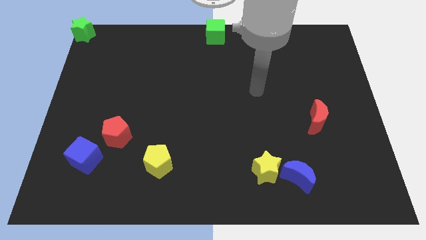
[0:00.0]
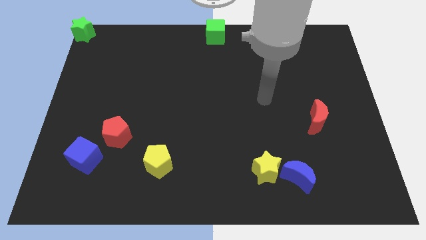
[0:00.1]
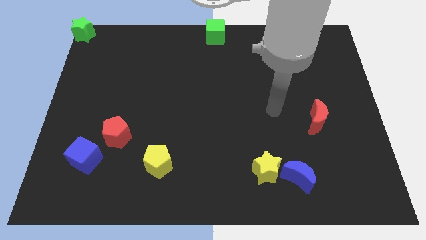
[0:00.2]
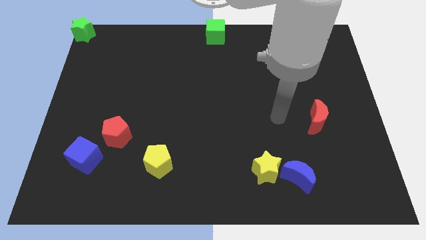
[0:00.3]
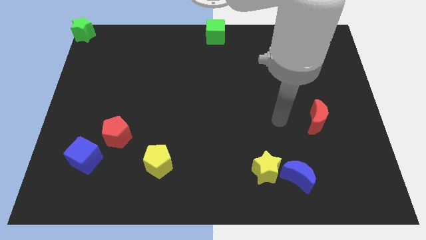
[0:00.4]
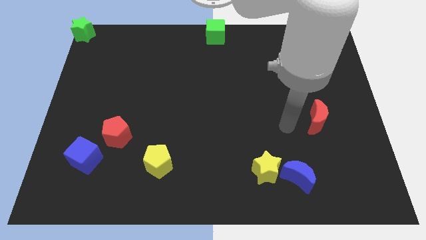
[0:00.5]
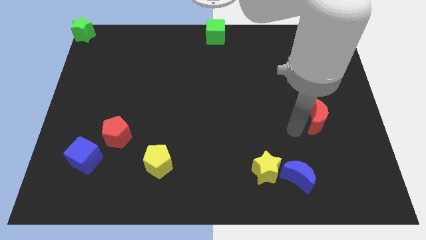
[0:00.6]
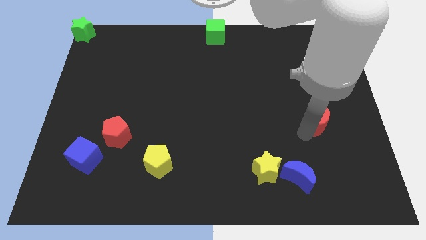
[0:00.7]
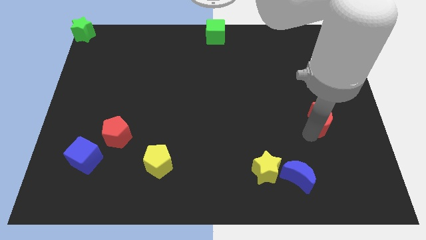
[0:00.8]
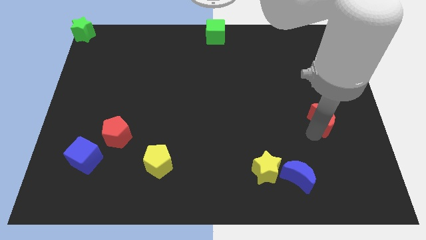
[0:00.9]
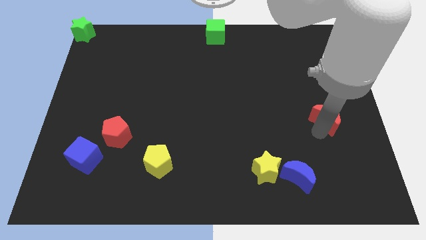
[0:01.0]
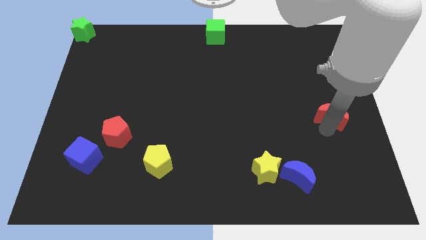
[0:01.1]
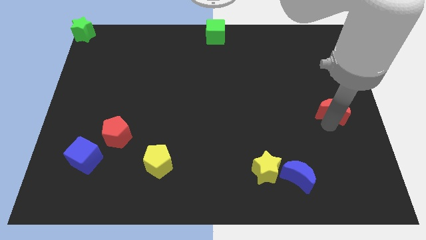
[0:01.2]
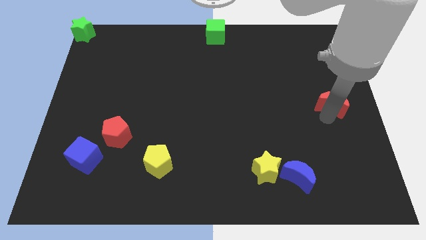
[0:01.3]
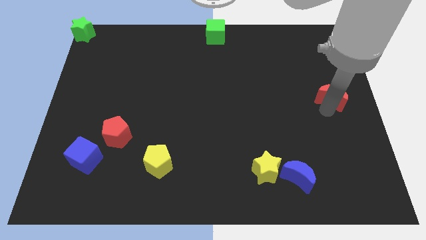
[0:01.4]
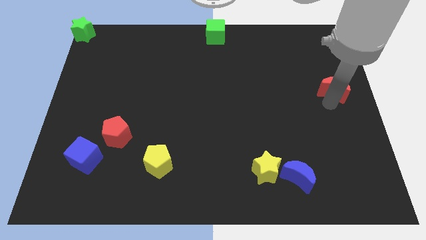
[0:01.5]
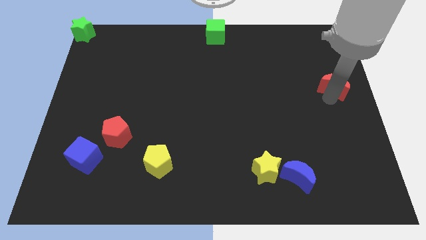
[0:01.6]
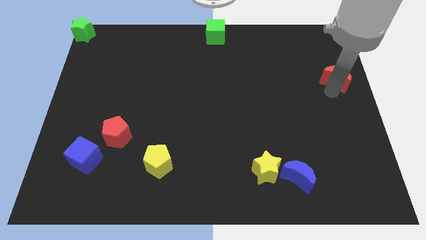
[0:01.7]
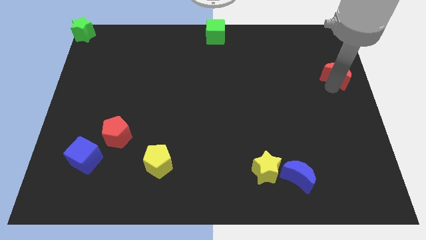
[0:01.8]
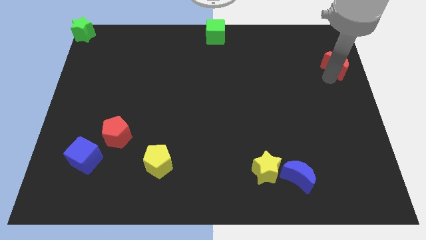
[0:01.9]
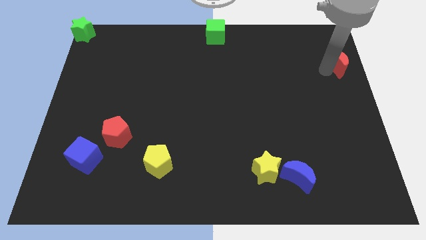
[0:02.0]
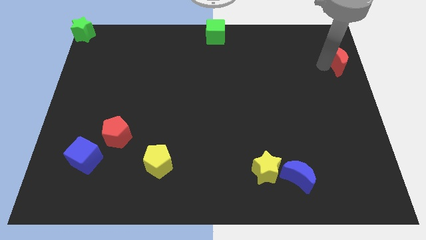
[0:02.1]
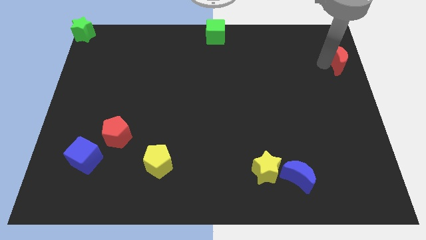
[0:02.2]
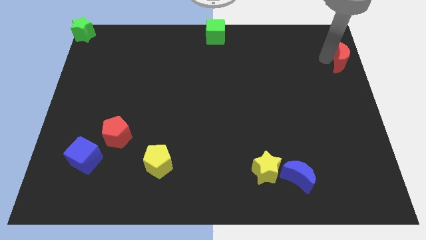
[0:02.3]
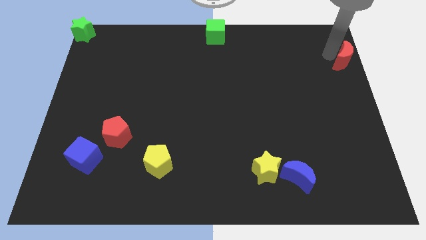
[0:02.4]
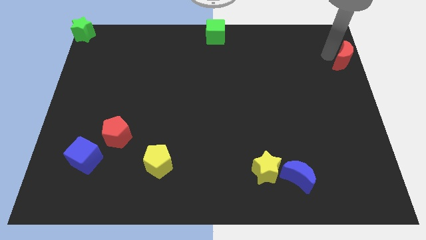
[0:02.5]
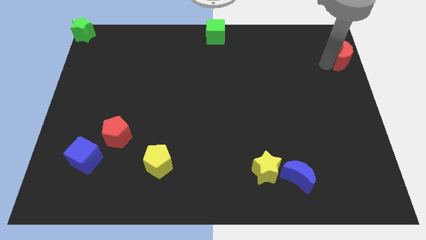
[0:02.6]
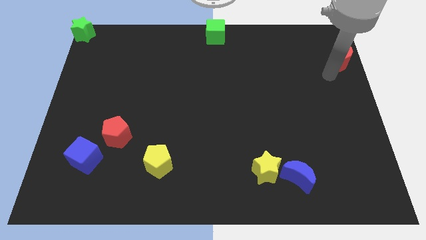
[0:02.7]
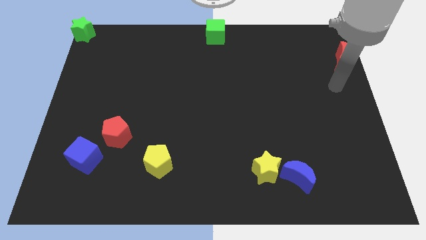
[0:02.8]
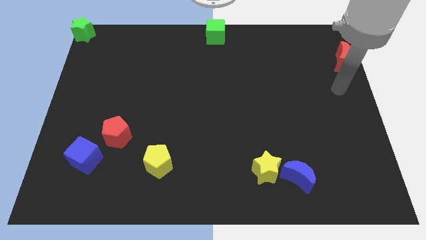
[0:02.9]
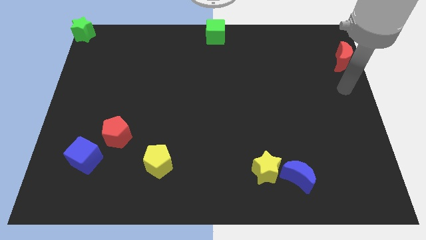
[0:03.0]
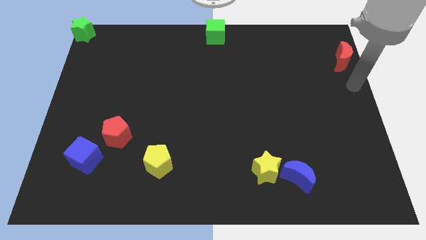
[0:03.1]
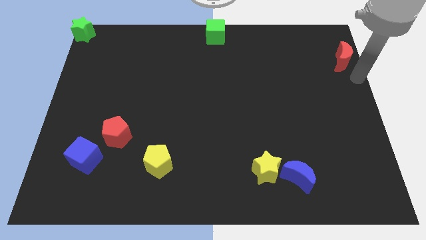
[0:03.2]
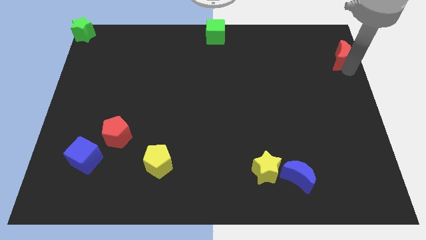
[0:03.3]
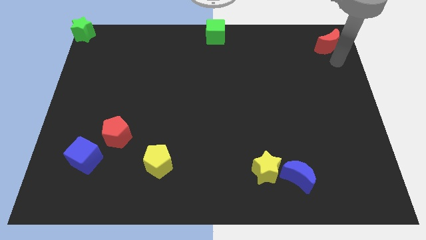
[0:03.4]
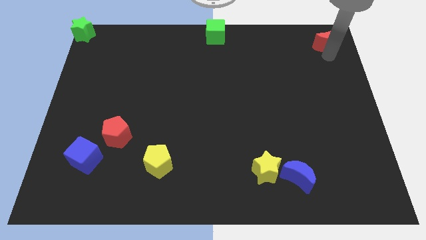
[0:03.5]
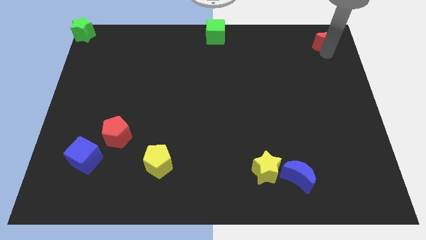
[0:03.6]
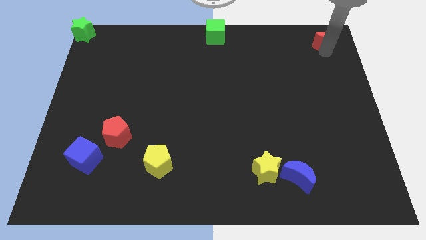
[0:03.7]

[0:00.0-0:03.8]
place red moon to the top right corner of the board

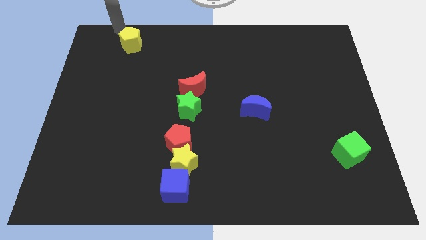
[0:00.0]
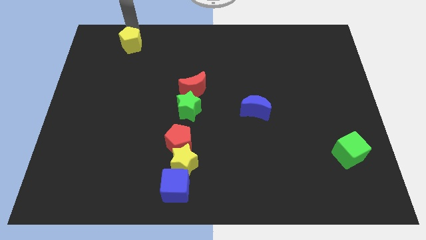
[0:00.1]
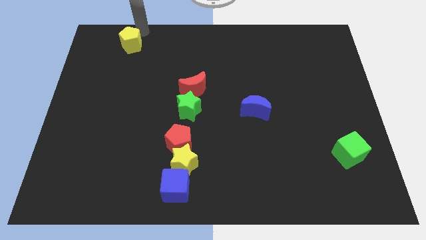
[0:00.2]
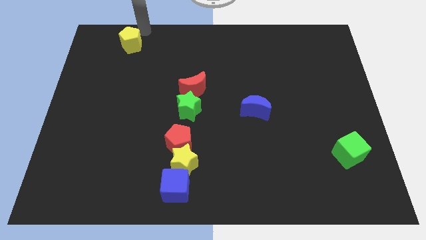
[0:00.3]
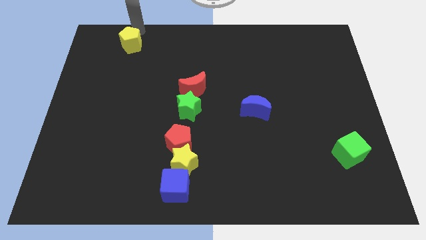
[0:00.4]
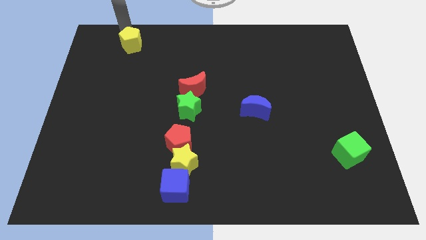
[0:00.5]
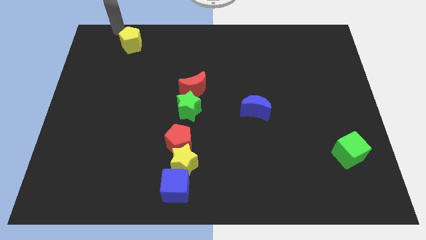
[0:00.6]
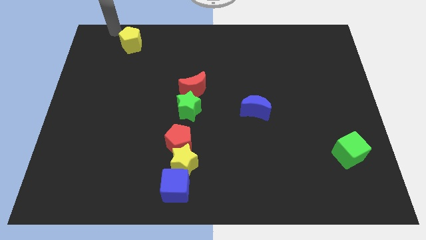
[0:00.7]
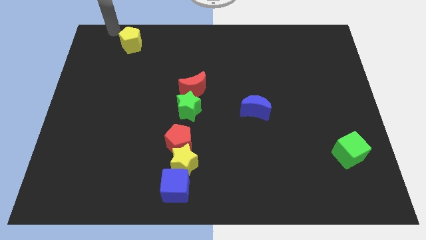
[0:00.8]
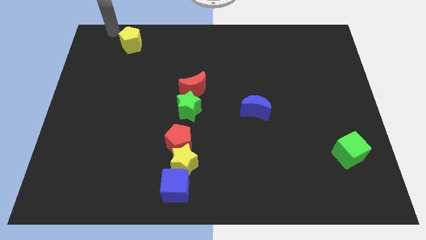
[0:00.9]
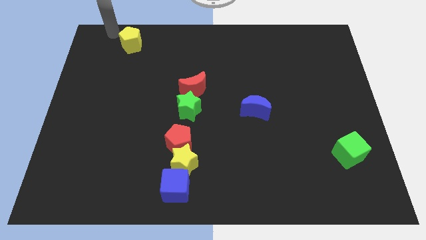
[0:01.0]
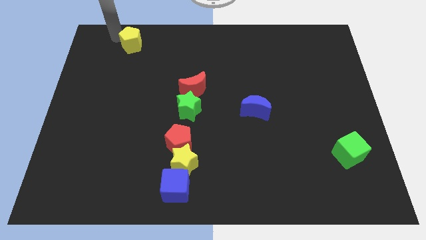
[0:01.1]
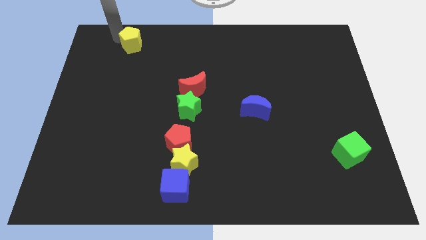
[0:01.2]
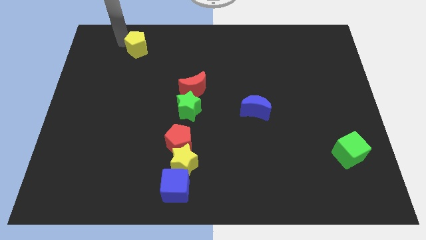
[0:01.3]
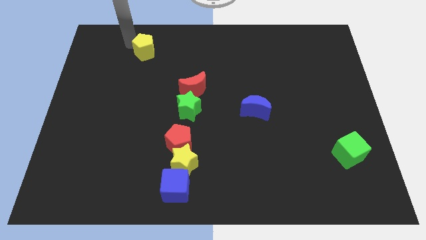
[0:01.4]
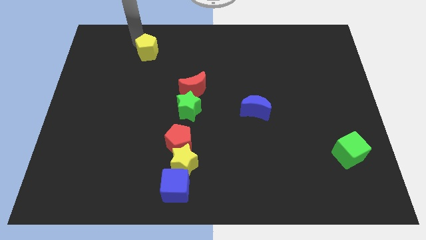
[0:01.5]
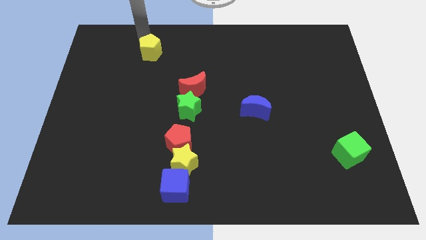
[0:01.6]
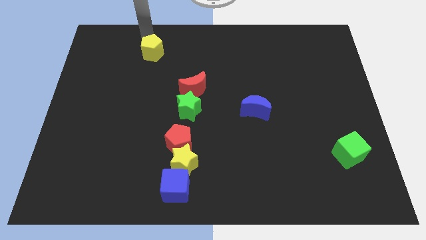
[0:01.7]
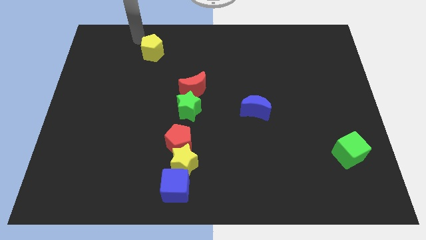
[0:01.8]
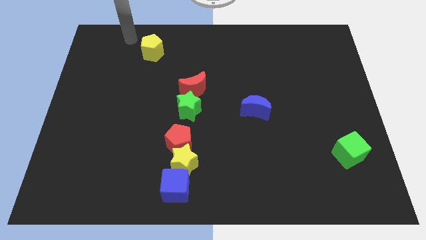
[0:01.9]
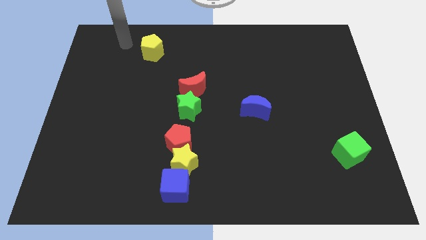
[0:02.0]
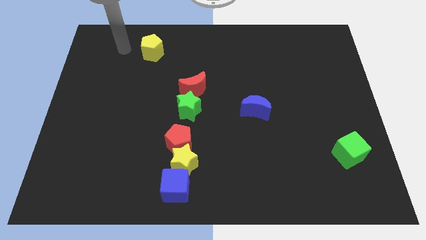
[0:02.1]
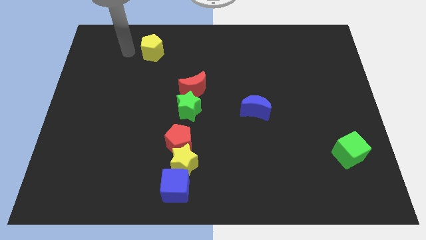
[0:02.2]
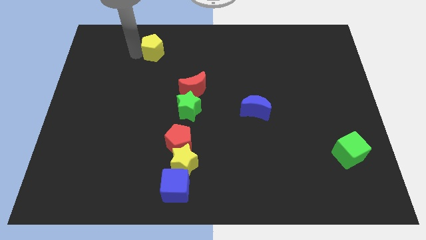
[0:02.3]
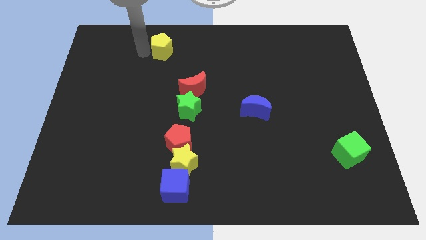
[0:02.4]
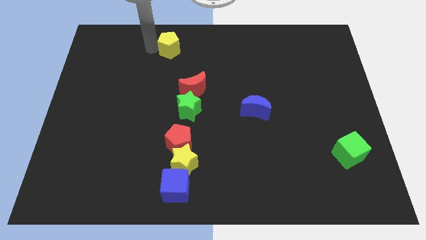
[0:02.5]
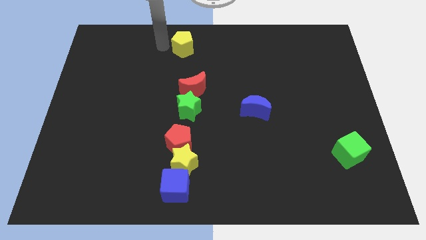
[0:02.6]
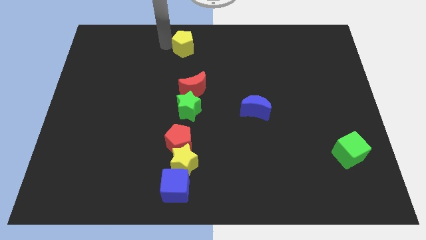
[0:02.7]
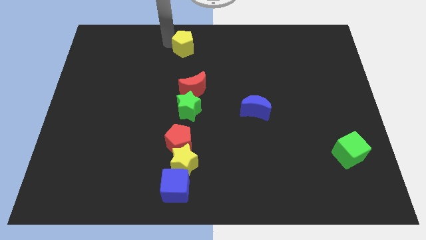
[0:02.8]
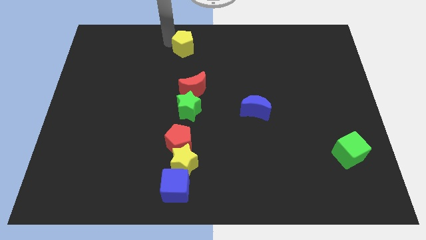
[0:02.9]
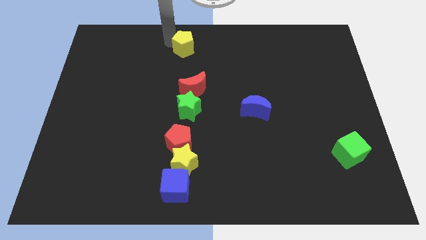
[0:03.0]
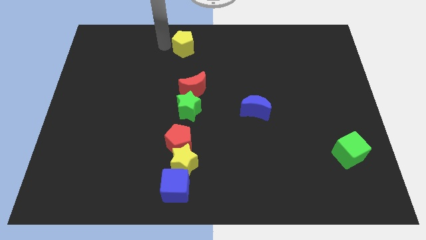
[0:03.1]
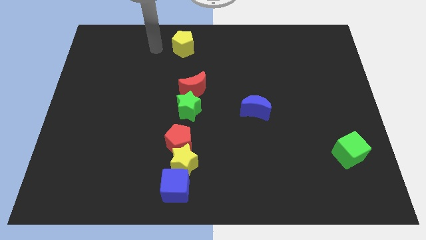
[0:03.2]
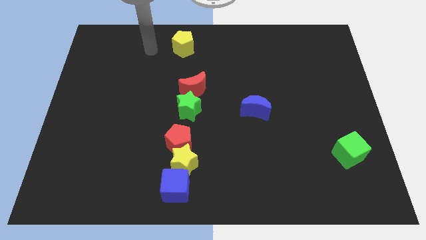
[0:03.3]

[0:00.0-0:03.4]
move yellow pentagon to the top of the red crescent

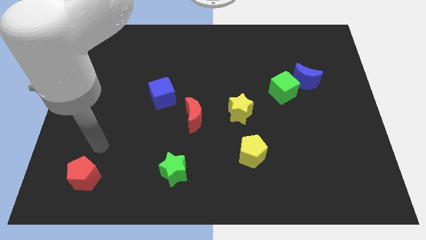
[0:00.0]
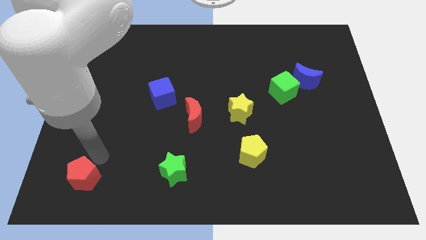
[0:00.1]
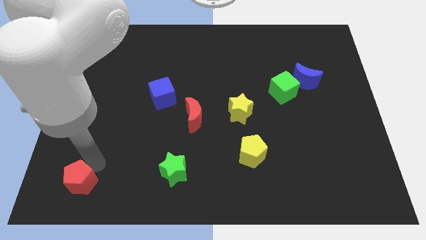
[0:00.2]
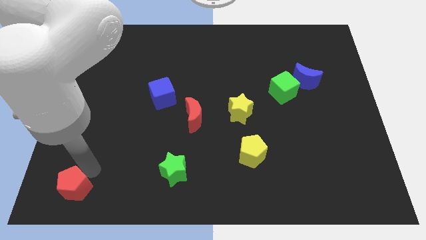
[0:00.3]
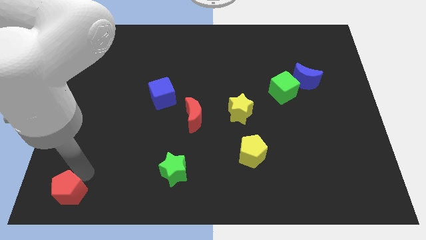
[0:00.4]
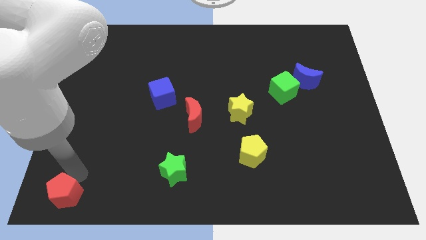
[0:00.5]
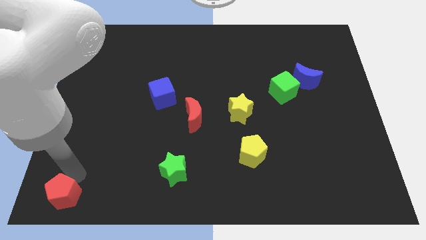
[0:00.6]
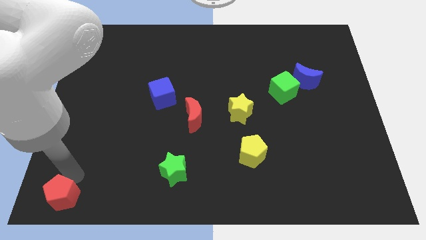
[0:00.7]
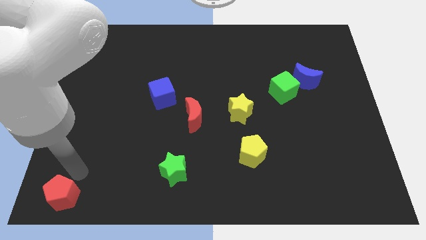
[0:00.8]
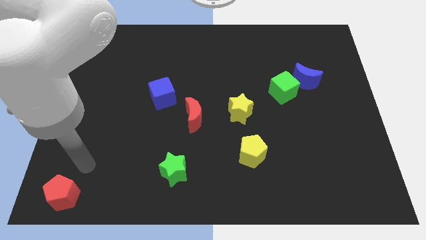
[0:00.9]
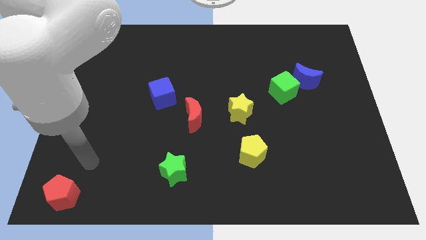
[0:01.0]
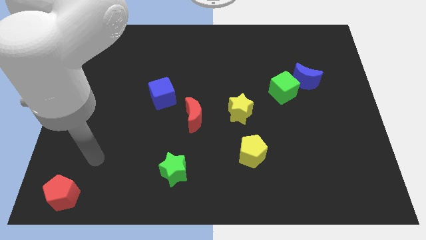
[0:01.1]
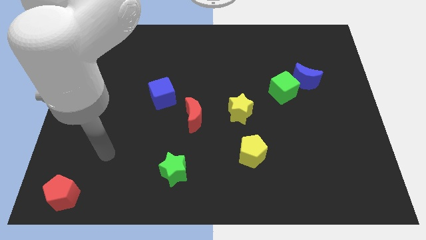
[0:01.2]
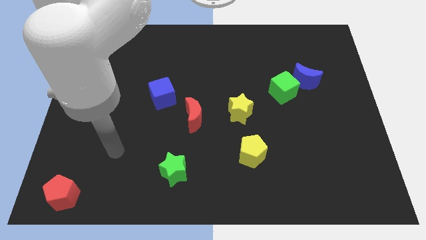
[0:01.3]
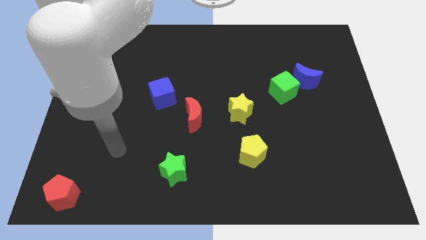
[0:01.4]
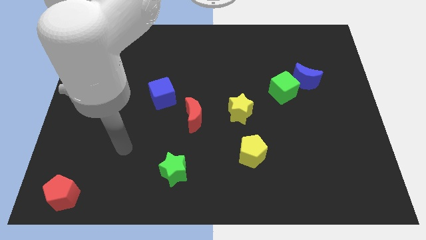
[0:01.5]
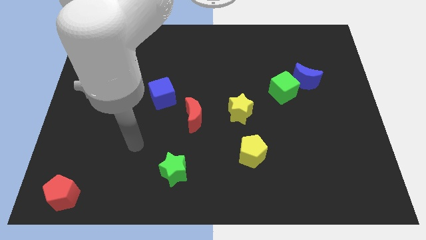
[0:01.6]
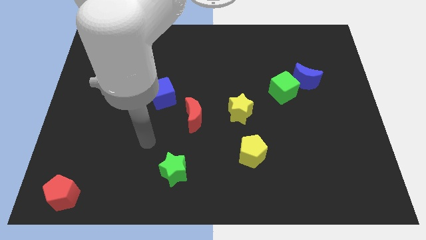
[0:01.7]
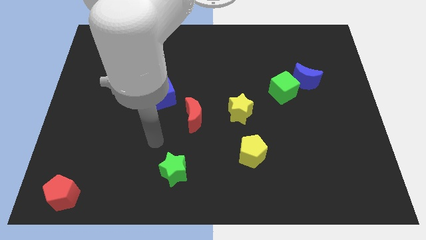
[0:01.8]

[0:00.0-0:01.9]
place your arm towards the top of the green star
